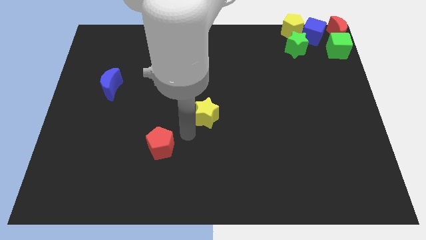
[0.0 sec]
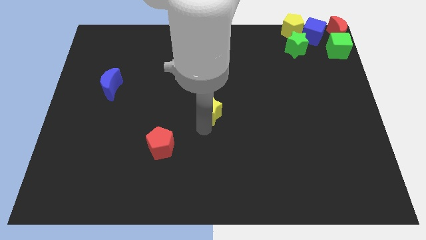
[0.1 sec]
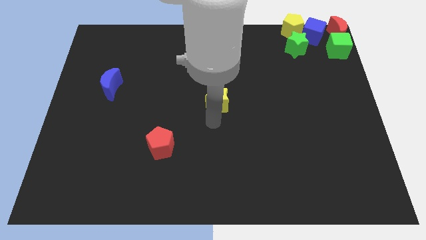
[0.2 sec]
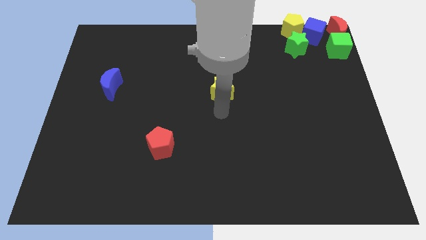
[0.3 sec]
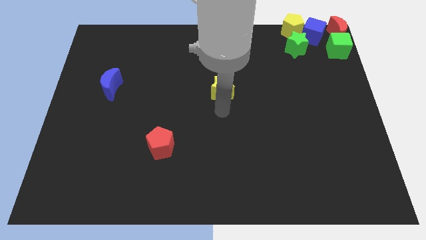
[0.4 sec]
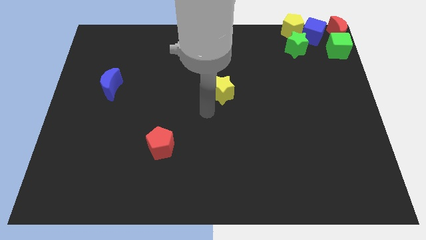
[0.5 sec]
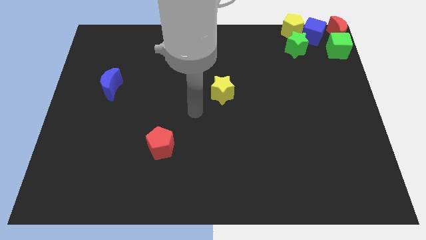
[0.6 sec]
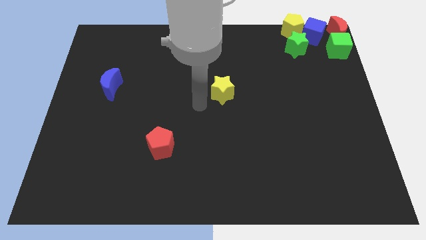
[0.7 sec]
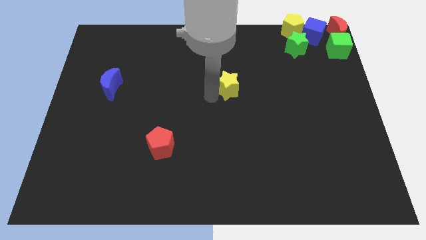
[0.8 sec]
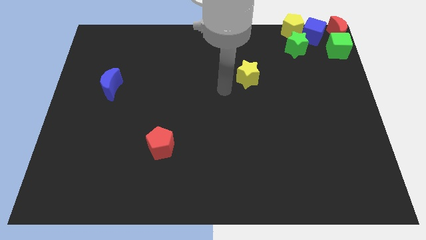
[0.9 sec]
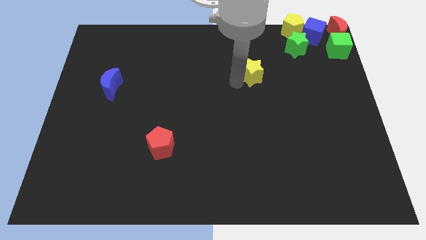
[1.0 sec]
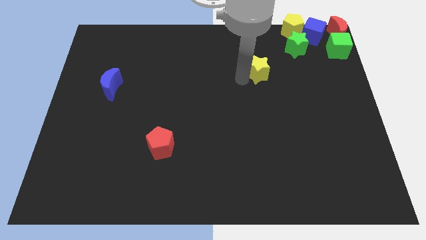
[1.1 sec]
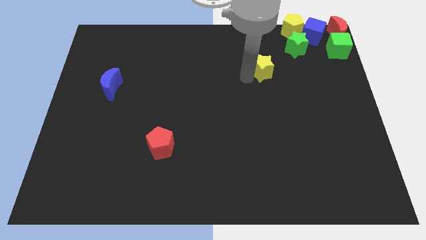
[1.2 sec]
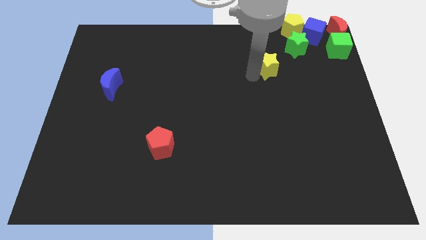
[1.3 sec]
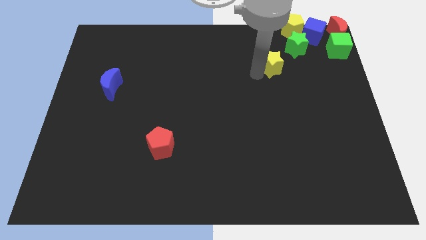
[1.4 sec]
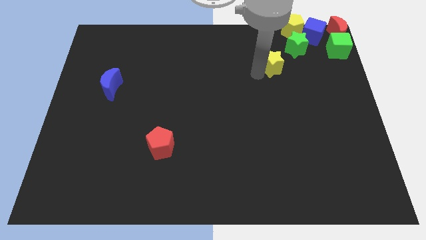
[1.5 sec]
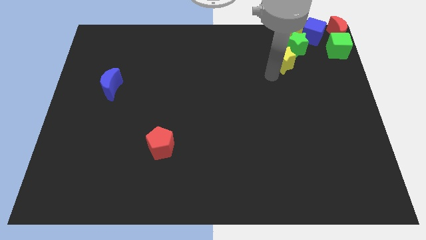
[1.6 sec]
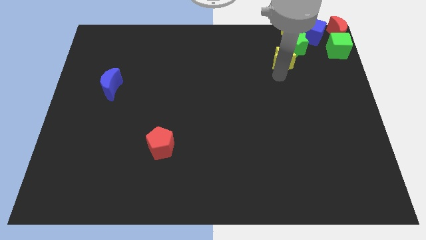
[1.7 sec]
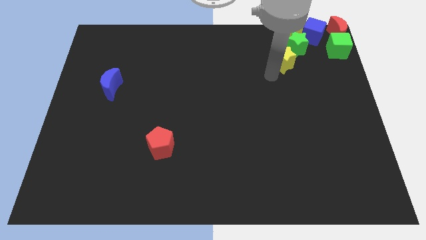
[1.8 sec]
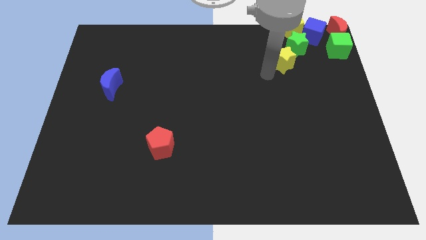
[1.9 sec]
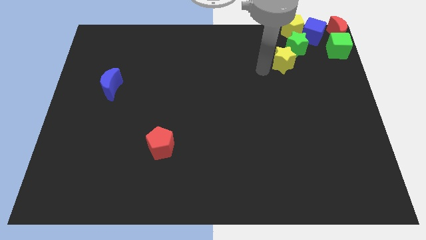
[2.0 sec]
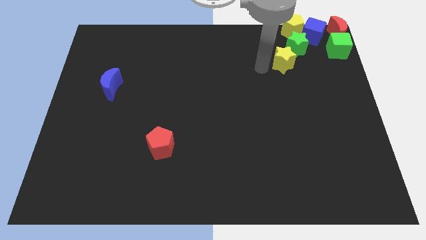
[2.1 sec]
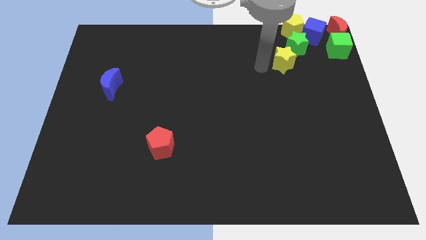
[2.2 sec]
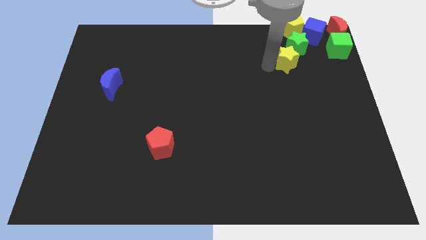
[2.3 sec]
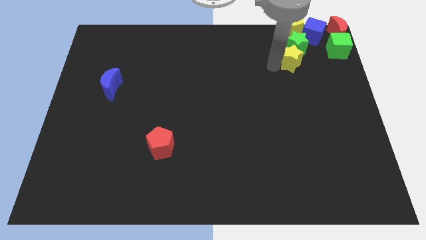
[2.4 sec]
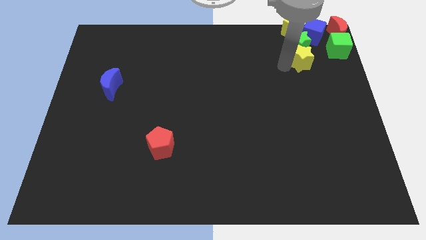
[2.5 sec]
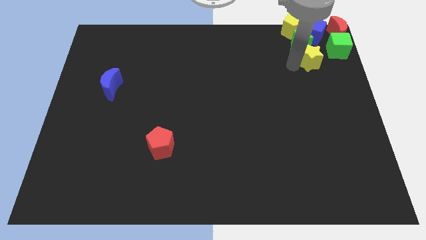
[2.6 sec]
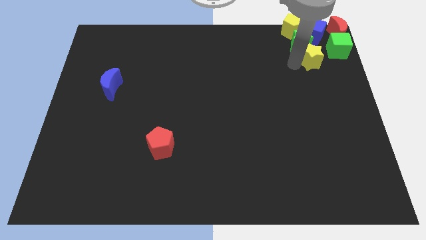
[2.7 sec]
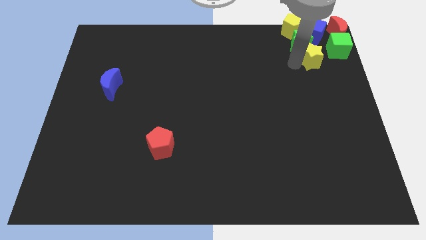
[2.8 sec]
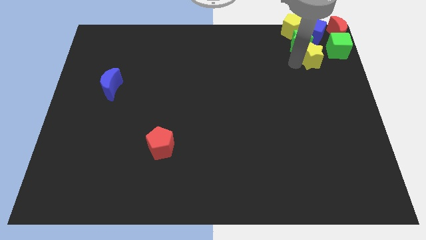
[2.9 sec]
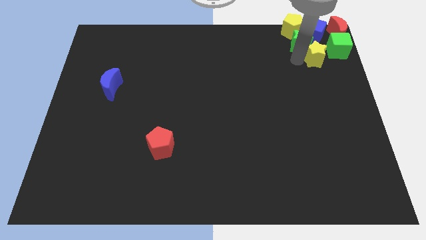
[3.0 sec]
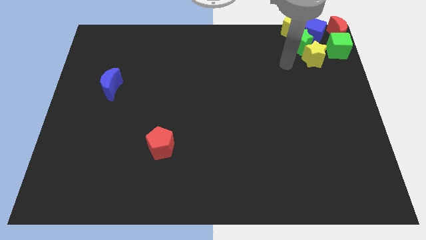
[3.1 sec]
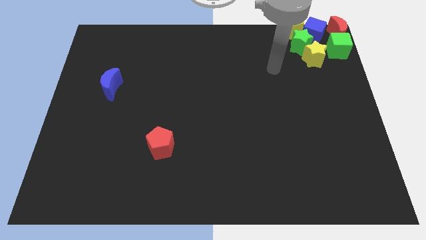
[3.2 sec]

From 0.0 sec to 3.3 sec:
move yellow star bottom right to green star

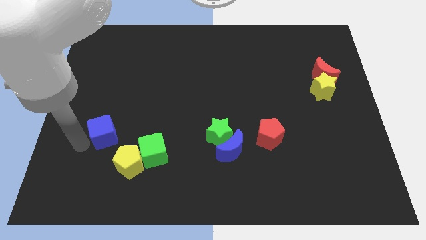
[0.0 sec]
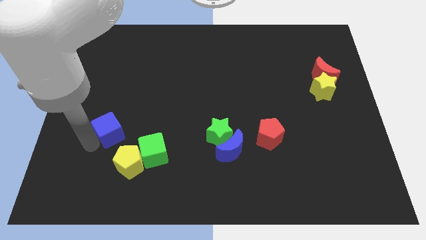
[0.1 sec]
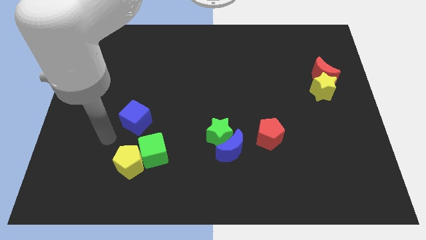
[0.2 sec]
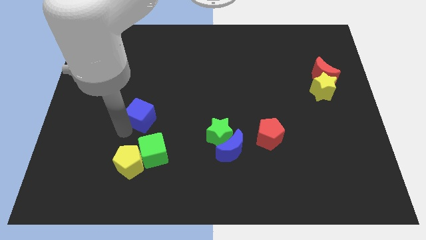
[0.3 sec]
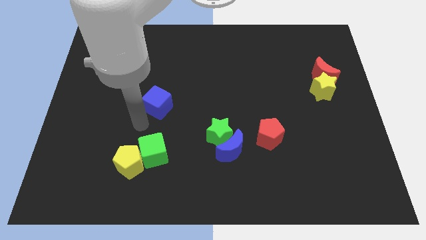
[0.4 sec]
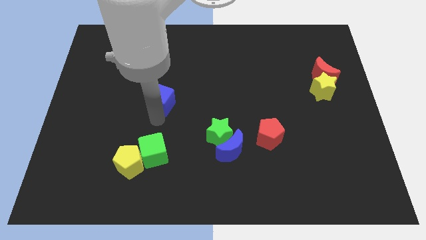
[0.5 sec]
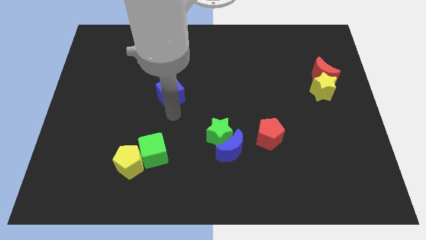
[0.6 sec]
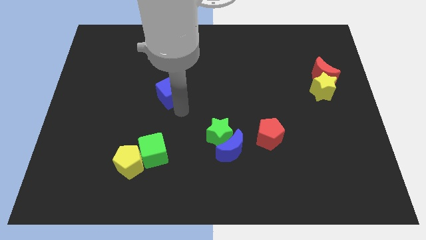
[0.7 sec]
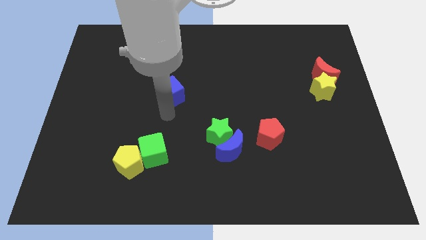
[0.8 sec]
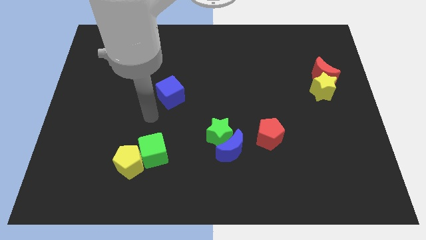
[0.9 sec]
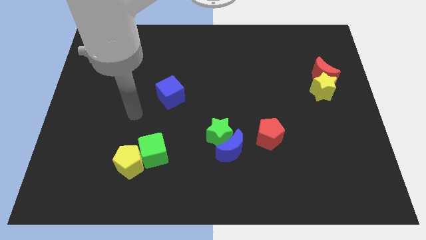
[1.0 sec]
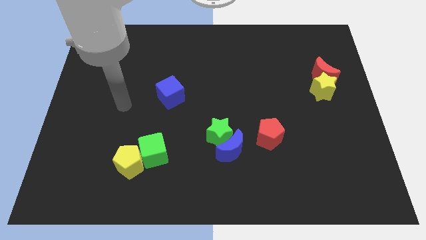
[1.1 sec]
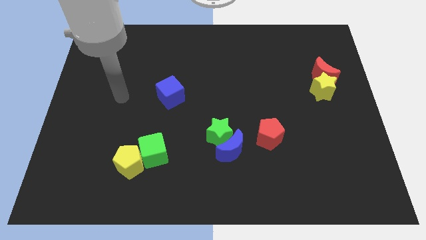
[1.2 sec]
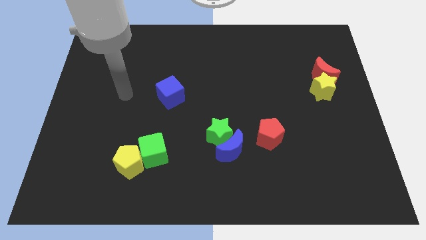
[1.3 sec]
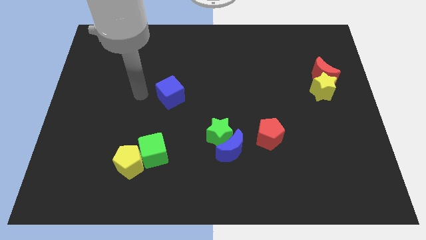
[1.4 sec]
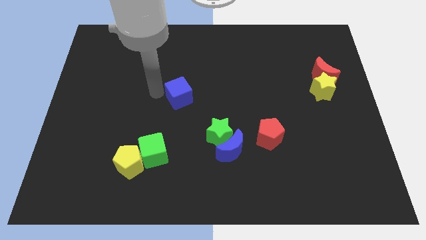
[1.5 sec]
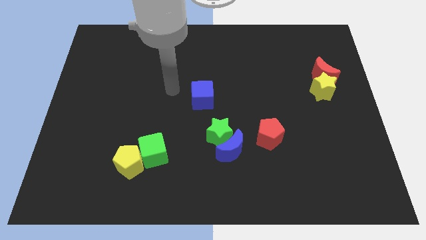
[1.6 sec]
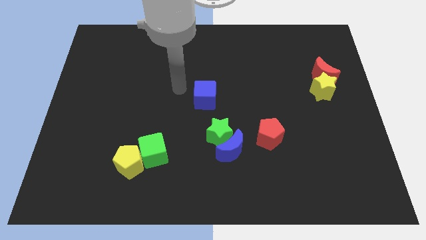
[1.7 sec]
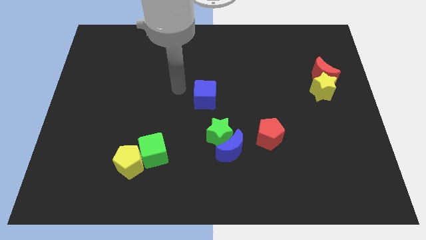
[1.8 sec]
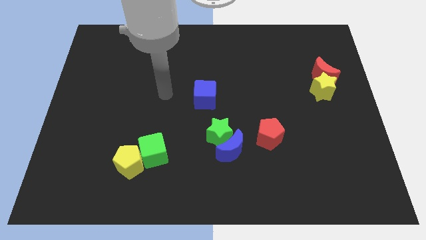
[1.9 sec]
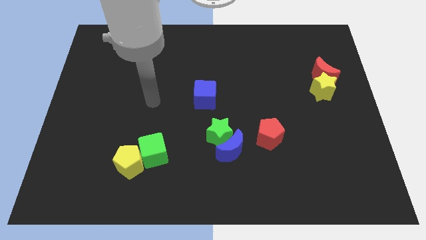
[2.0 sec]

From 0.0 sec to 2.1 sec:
put the blue cube above green star

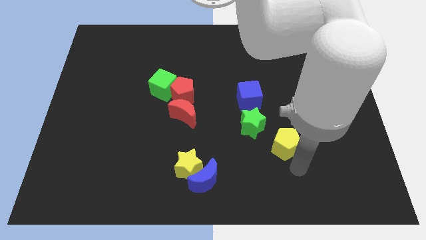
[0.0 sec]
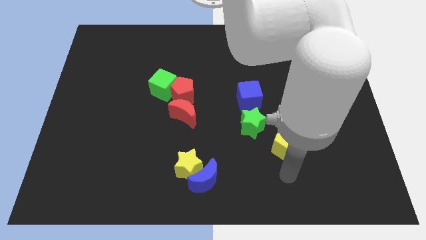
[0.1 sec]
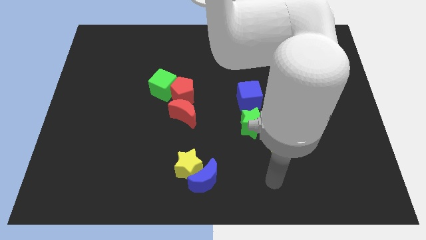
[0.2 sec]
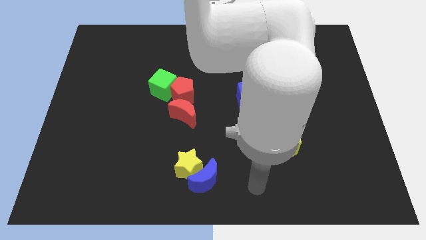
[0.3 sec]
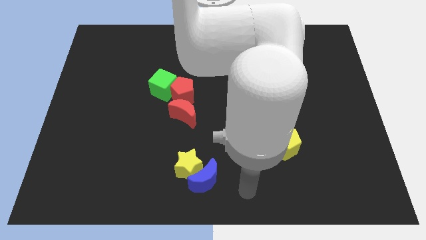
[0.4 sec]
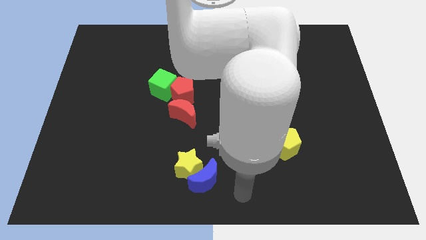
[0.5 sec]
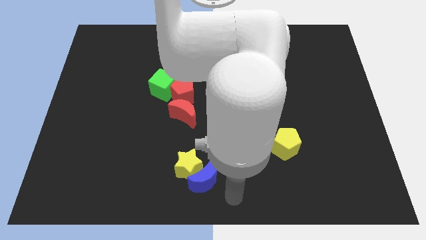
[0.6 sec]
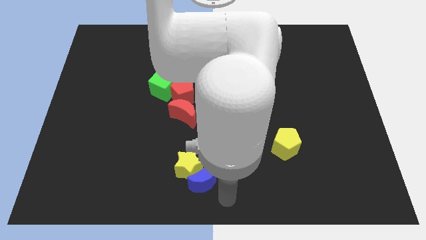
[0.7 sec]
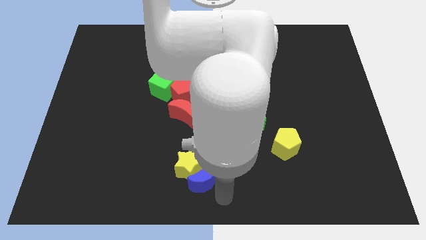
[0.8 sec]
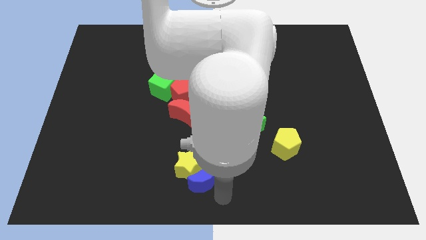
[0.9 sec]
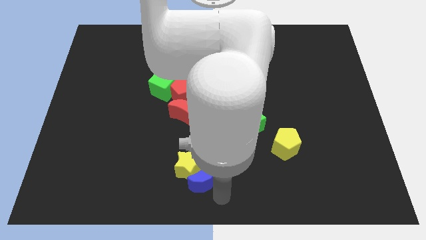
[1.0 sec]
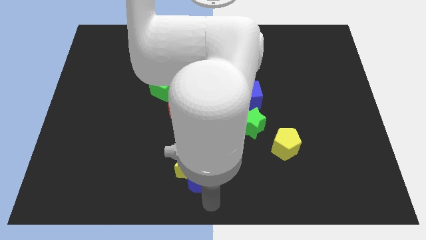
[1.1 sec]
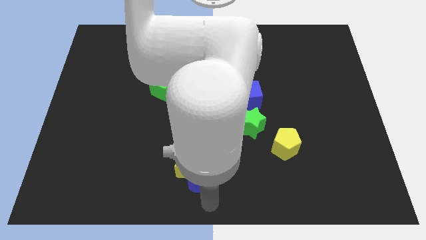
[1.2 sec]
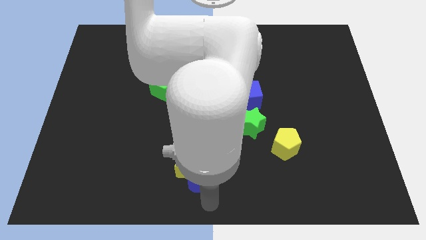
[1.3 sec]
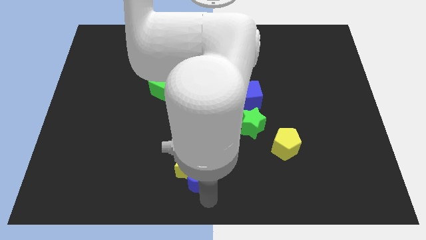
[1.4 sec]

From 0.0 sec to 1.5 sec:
move your arm towards the blue moon

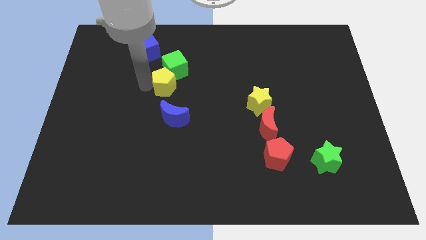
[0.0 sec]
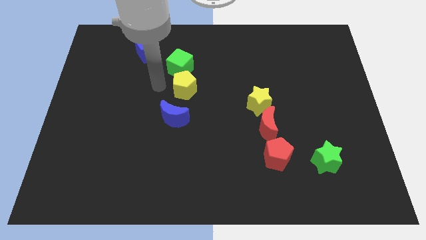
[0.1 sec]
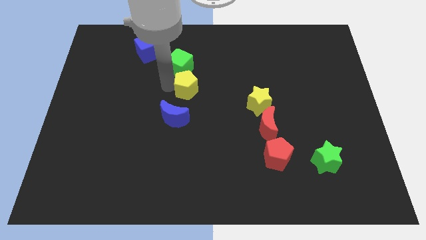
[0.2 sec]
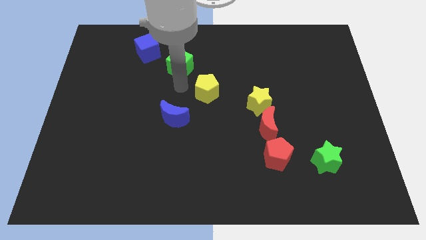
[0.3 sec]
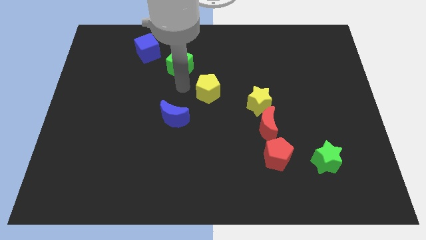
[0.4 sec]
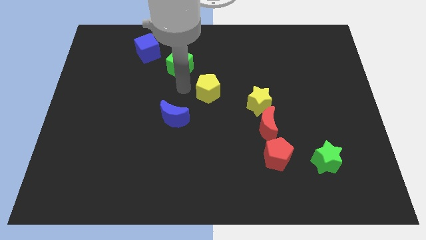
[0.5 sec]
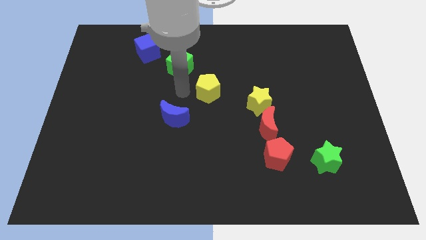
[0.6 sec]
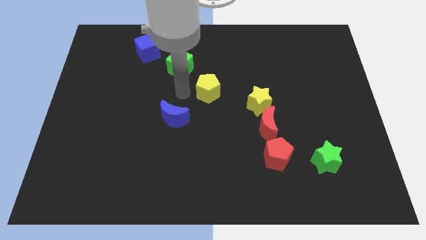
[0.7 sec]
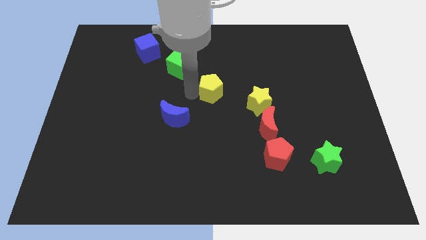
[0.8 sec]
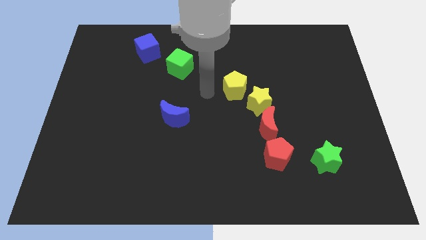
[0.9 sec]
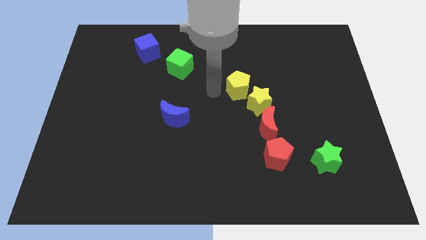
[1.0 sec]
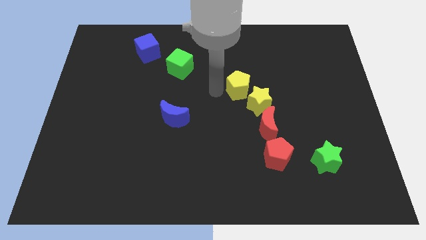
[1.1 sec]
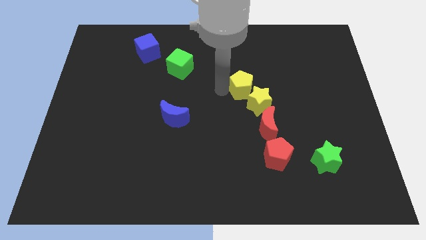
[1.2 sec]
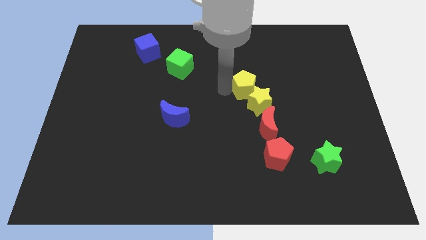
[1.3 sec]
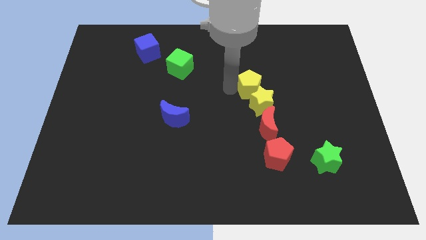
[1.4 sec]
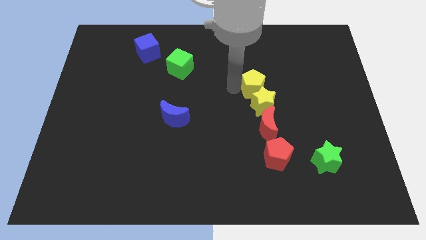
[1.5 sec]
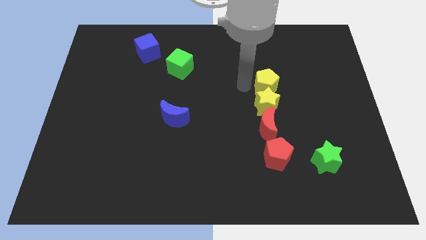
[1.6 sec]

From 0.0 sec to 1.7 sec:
slide the yellow pentagon above the yellow star

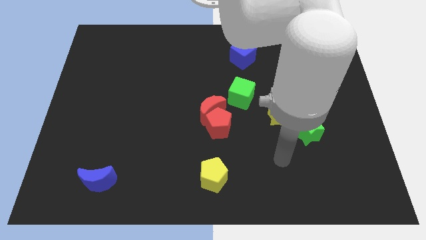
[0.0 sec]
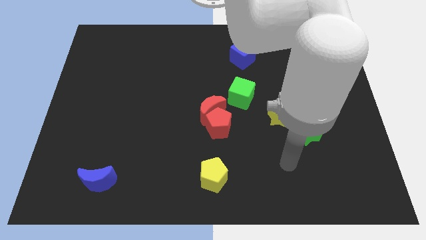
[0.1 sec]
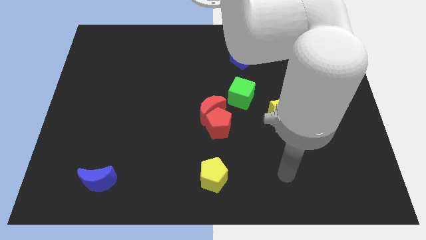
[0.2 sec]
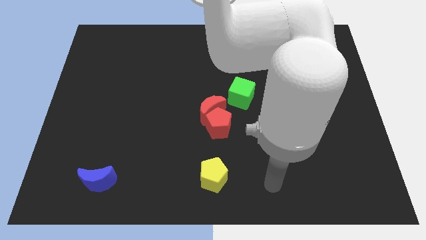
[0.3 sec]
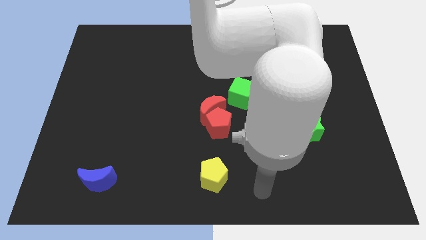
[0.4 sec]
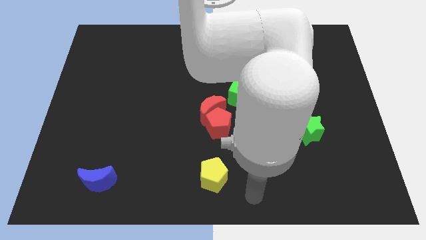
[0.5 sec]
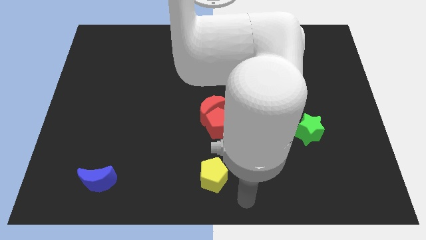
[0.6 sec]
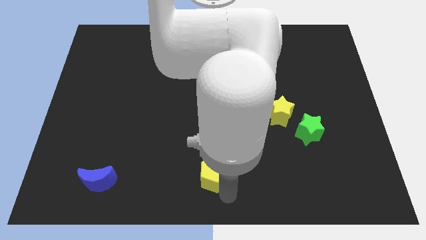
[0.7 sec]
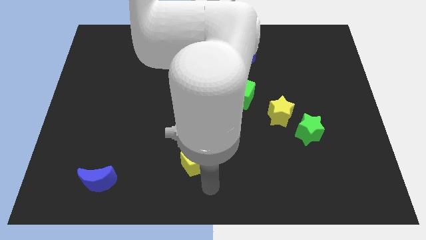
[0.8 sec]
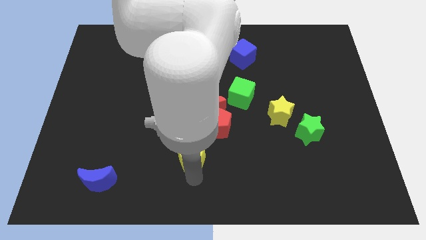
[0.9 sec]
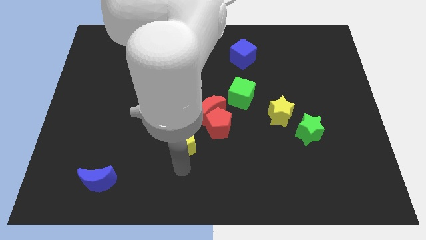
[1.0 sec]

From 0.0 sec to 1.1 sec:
move your arm to the bottom side of the yellow pentagon
